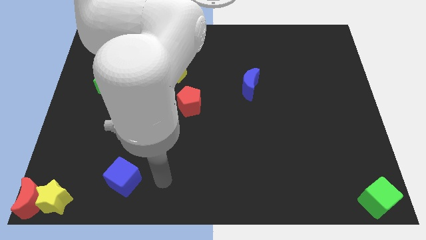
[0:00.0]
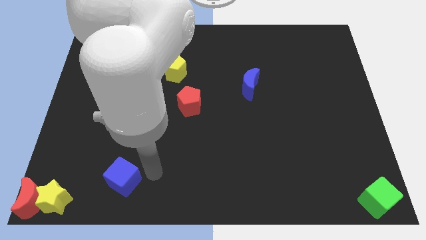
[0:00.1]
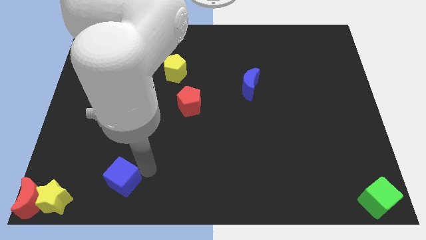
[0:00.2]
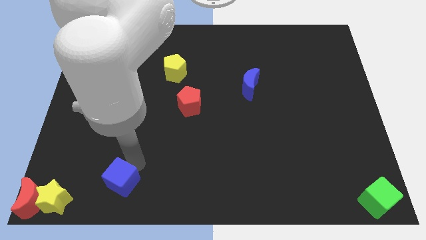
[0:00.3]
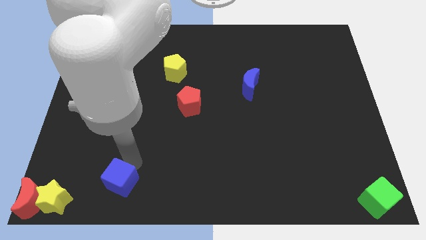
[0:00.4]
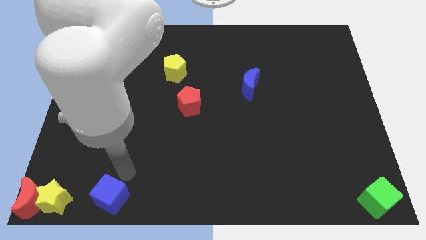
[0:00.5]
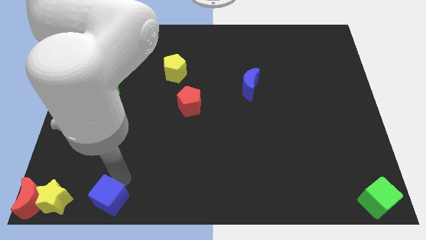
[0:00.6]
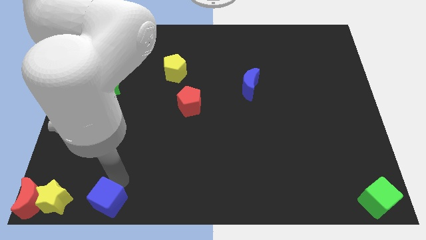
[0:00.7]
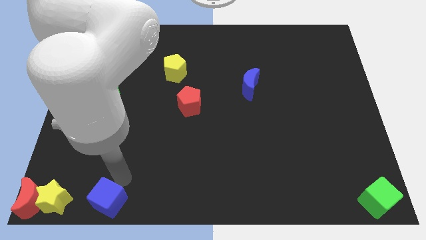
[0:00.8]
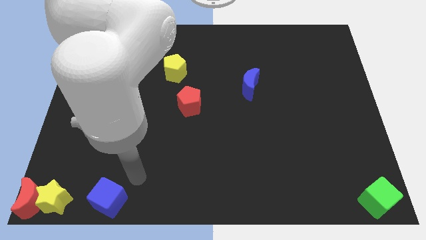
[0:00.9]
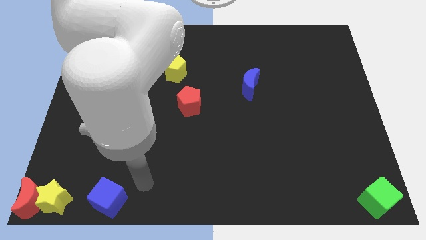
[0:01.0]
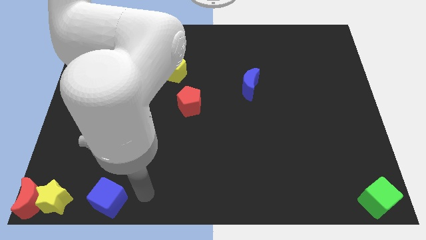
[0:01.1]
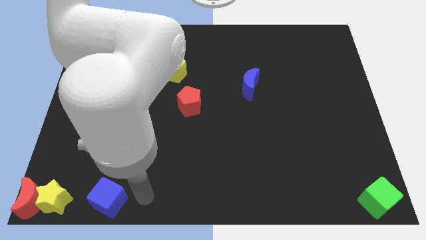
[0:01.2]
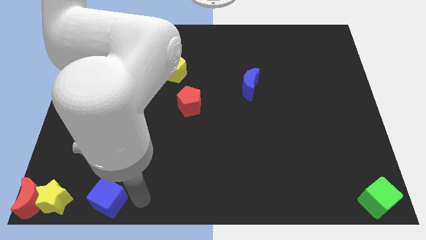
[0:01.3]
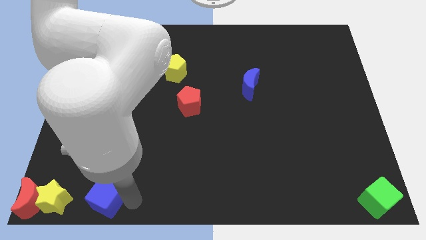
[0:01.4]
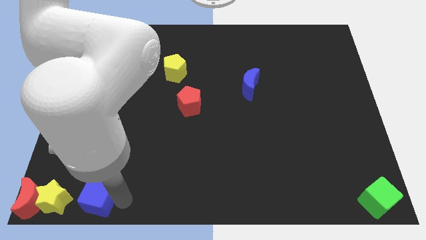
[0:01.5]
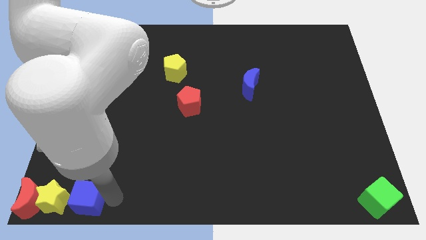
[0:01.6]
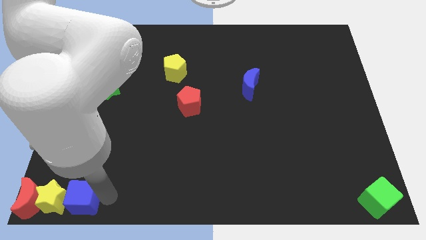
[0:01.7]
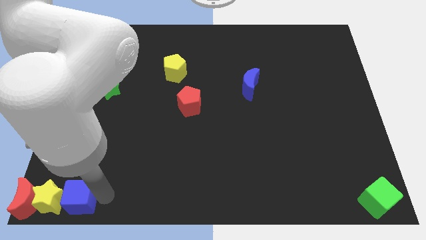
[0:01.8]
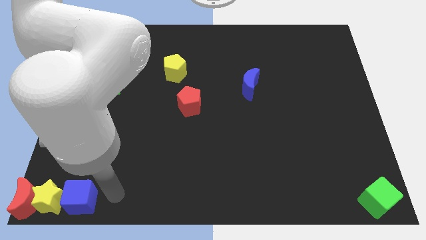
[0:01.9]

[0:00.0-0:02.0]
move the blue cube to the right of the yellow star in parallel position to it

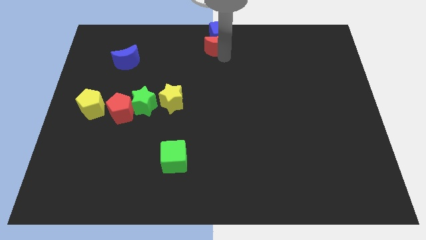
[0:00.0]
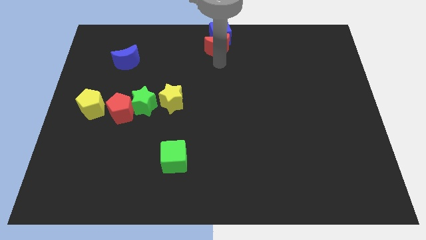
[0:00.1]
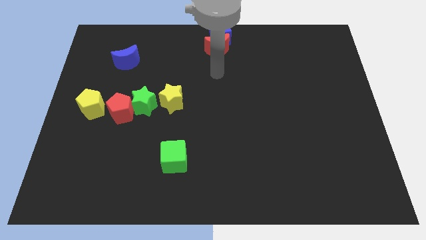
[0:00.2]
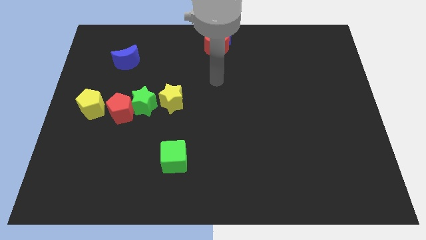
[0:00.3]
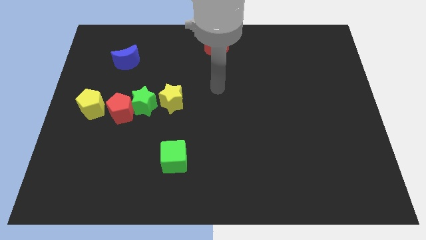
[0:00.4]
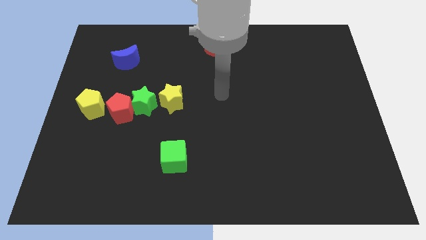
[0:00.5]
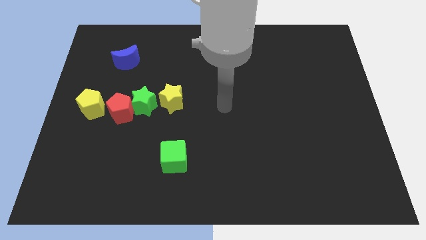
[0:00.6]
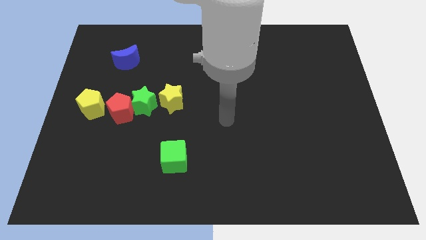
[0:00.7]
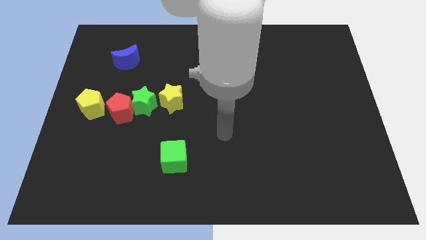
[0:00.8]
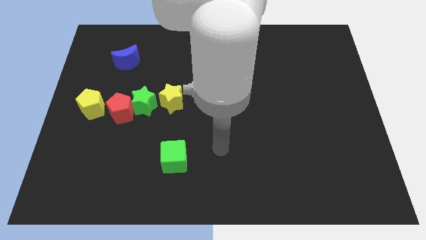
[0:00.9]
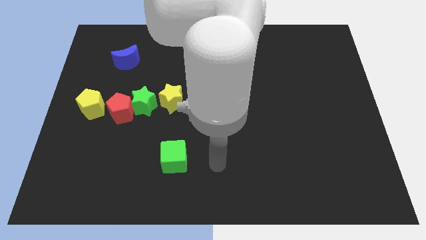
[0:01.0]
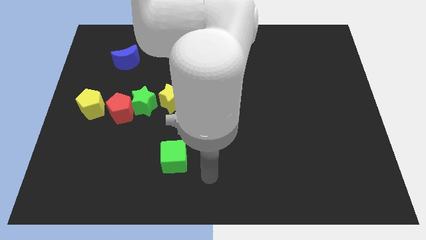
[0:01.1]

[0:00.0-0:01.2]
move arm away from red moon

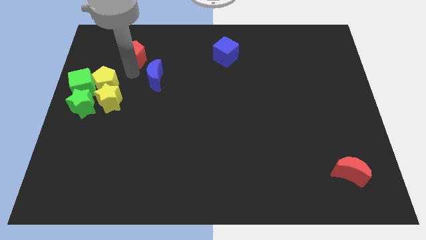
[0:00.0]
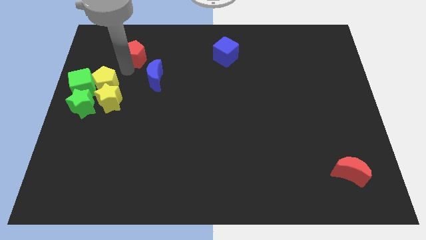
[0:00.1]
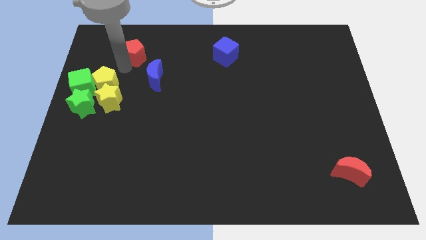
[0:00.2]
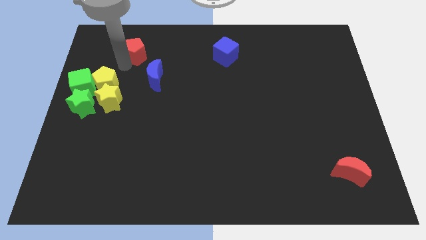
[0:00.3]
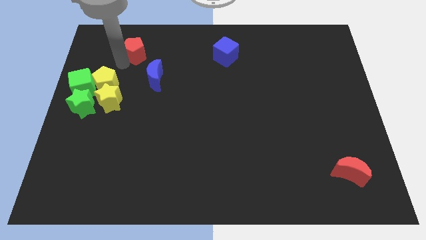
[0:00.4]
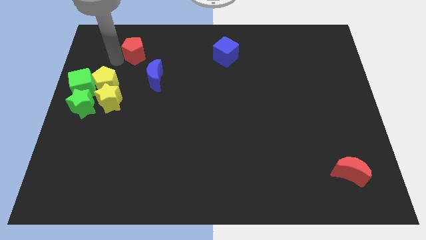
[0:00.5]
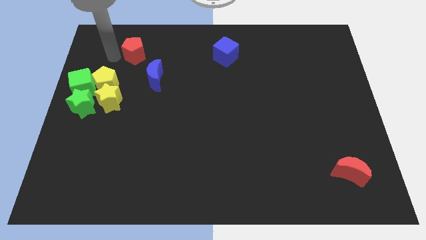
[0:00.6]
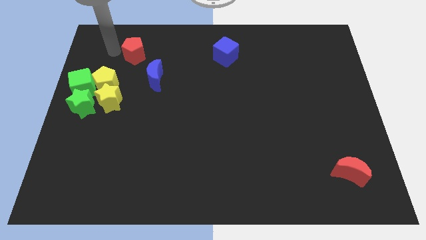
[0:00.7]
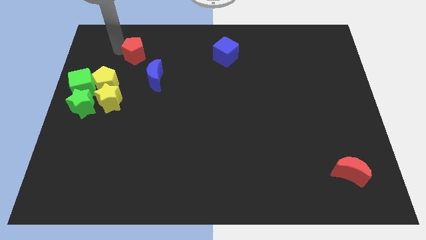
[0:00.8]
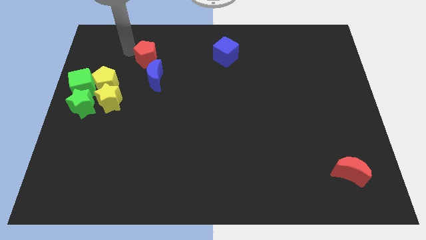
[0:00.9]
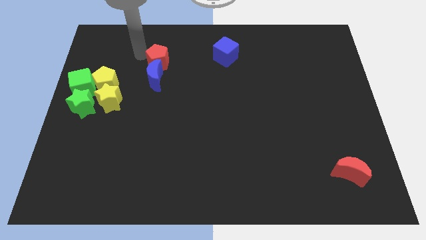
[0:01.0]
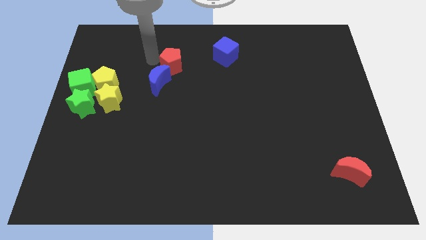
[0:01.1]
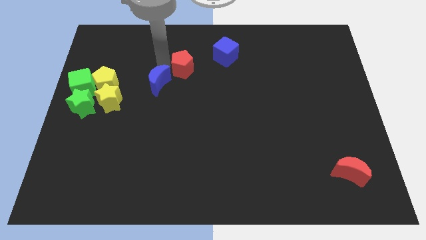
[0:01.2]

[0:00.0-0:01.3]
push the red pentagon slightly right

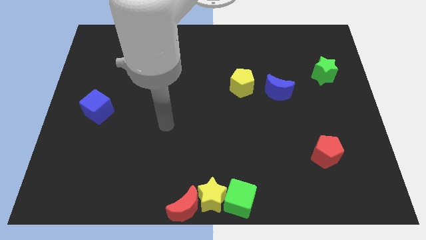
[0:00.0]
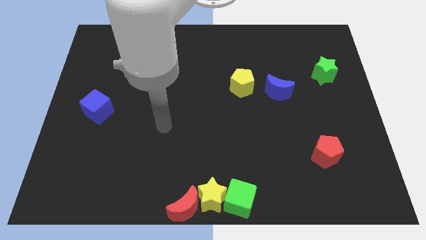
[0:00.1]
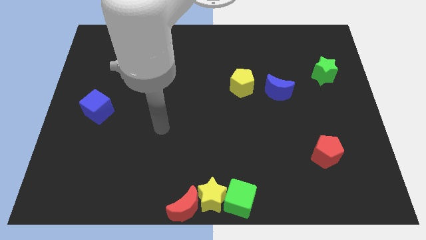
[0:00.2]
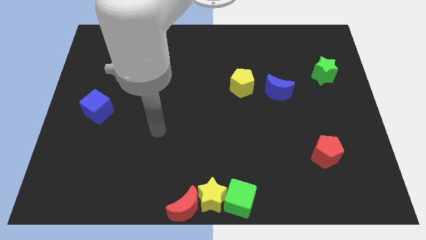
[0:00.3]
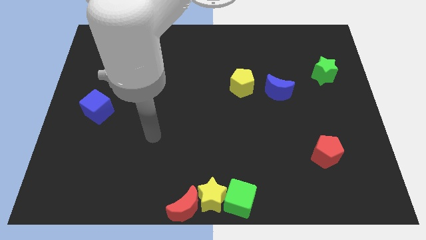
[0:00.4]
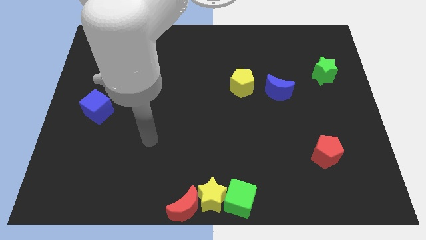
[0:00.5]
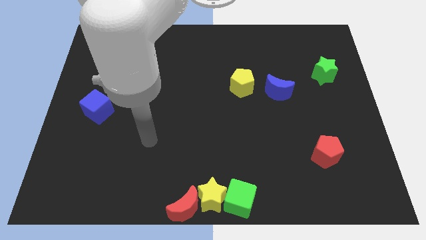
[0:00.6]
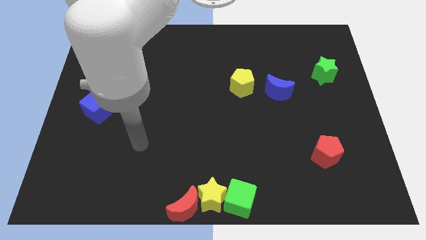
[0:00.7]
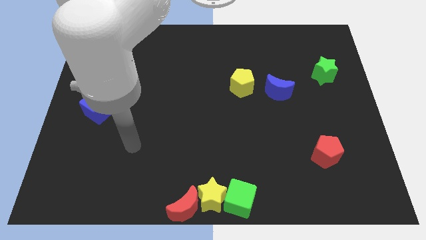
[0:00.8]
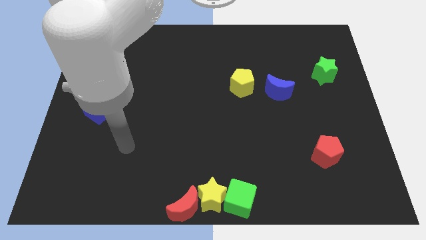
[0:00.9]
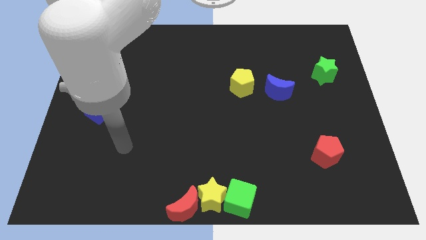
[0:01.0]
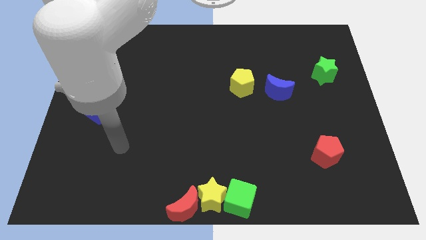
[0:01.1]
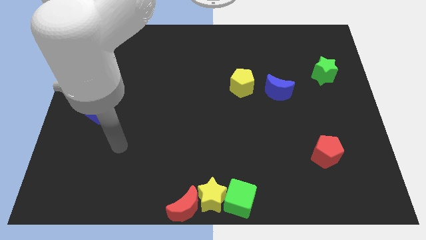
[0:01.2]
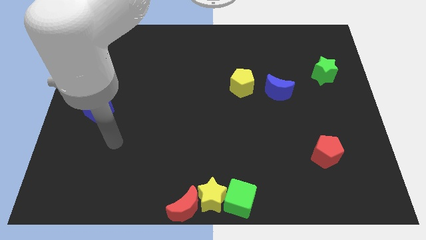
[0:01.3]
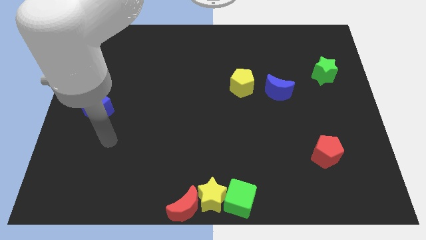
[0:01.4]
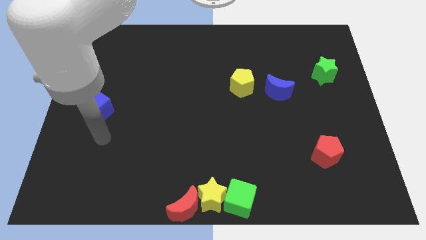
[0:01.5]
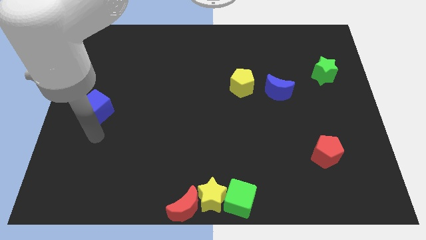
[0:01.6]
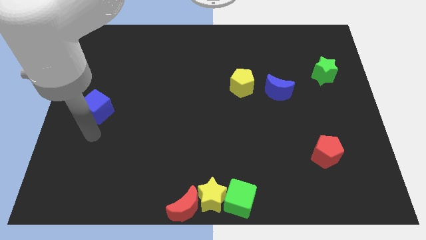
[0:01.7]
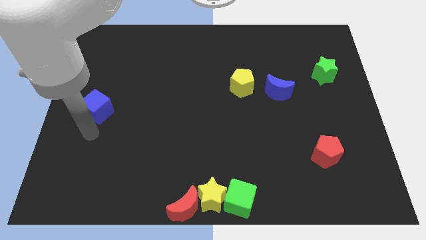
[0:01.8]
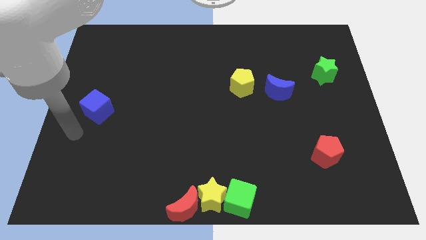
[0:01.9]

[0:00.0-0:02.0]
point your arm at the bottom side of the blue cube

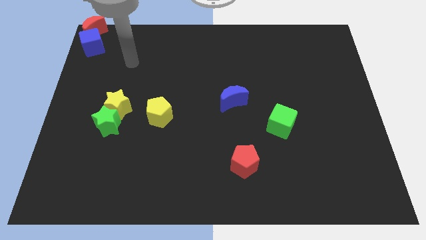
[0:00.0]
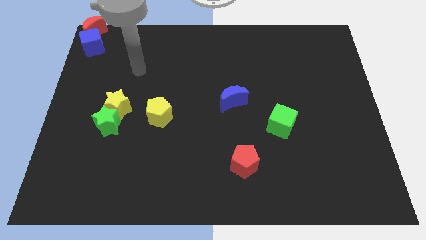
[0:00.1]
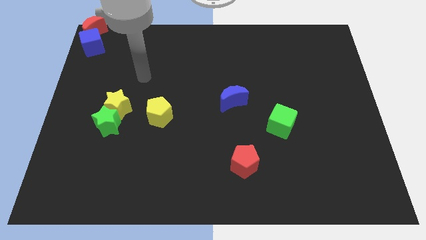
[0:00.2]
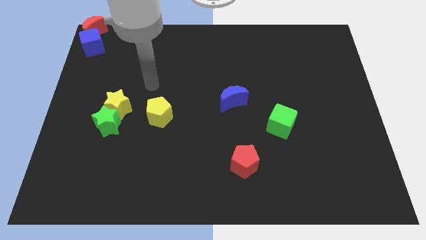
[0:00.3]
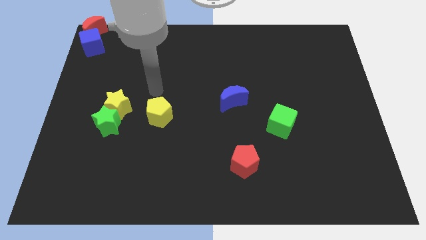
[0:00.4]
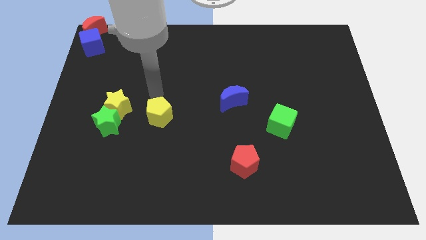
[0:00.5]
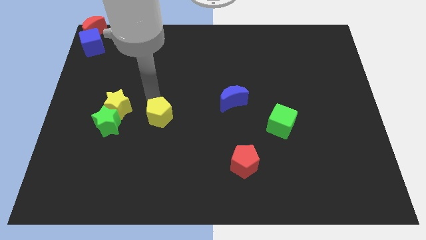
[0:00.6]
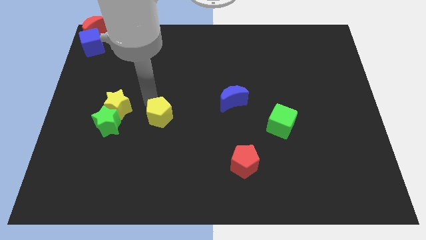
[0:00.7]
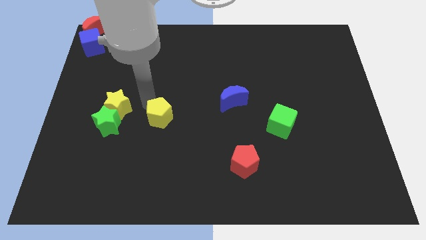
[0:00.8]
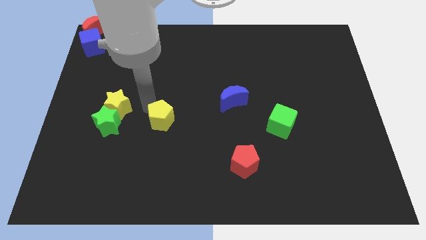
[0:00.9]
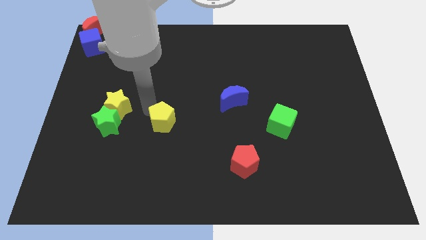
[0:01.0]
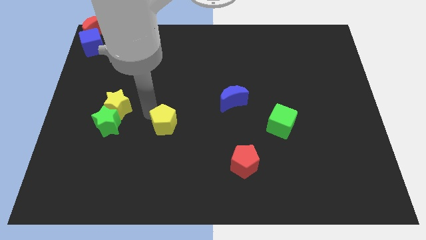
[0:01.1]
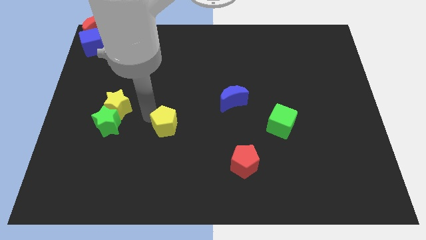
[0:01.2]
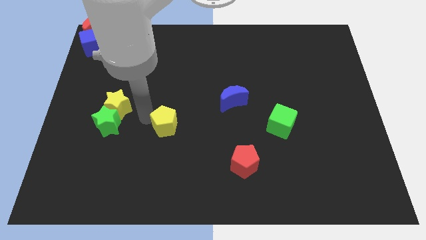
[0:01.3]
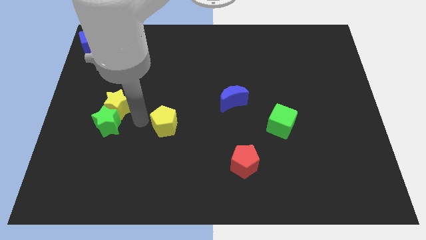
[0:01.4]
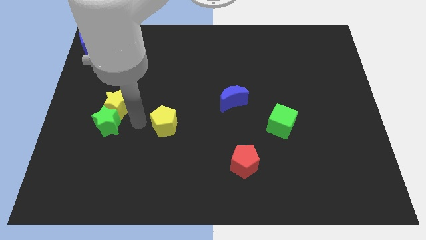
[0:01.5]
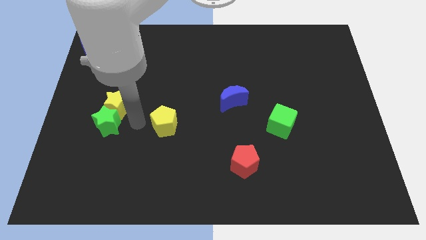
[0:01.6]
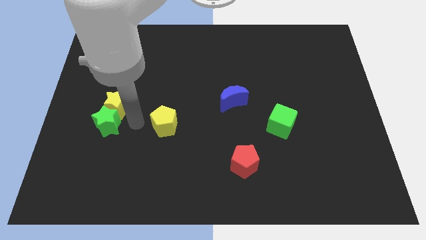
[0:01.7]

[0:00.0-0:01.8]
move the yellow pentagon slightly to the bottom

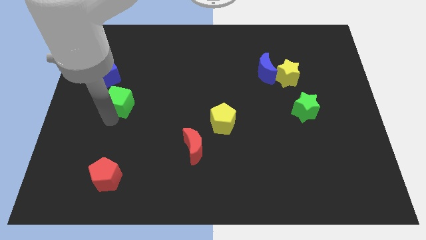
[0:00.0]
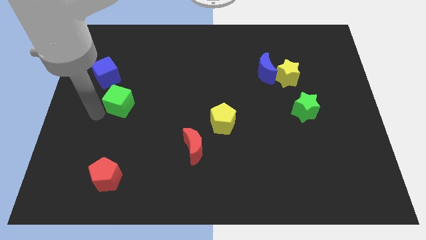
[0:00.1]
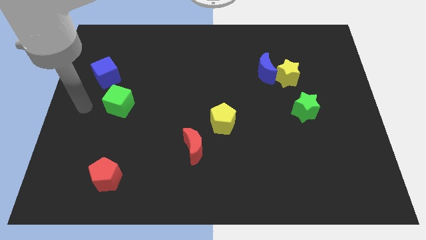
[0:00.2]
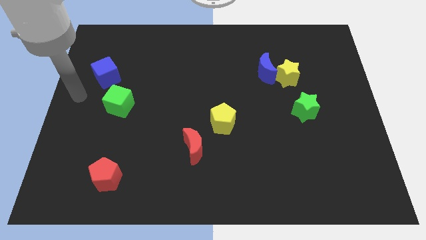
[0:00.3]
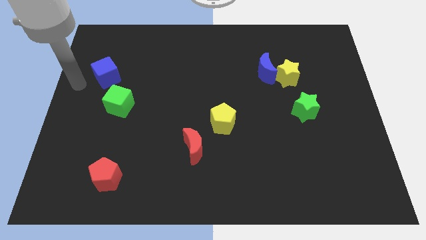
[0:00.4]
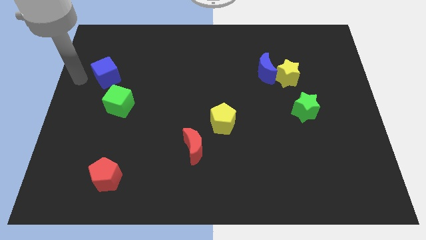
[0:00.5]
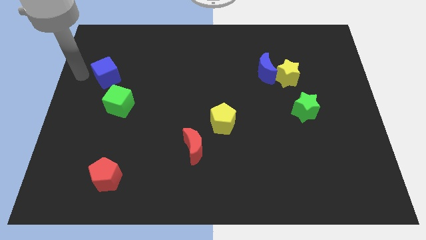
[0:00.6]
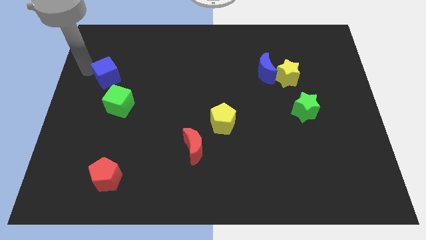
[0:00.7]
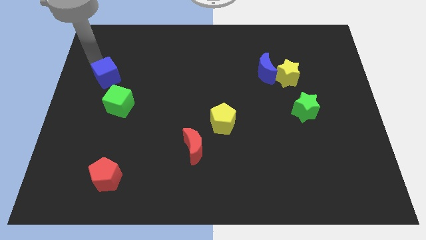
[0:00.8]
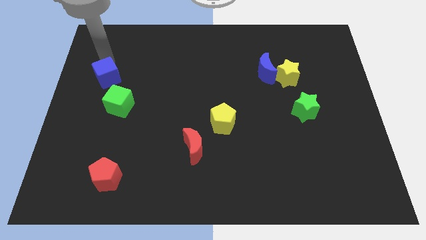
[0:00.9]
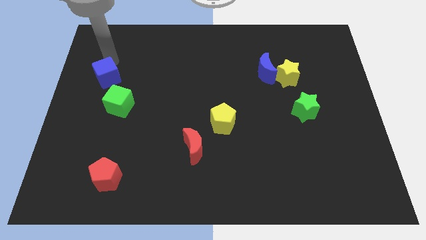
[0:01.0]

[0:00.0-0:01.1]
move your arm to the top of blue cube
